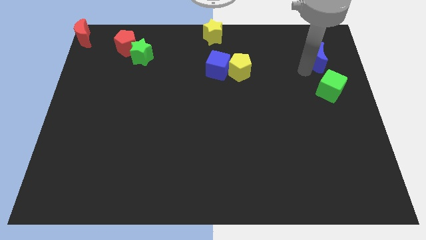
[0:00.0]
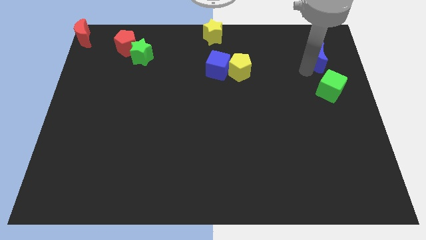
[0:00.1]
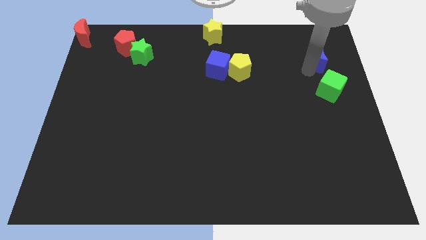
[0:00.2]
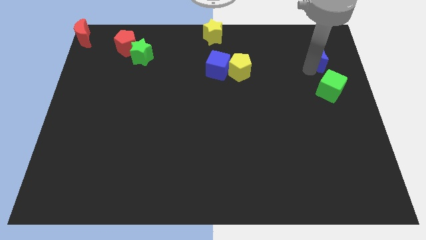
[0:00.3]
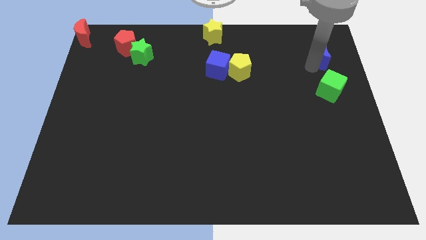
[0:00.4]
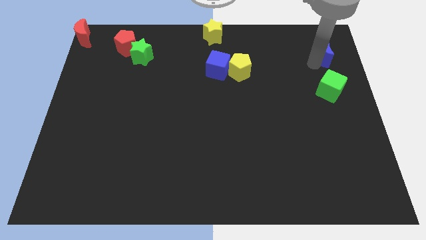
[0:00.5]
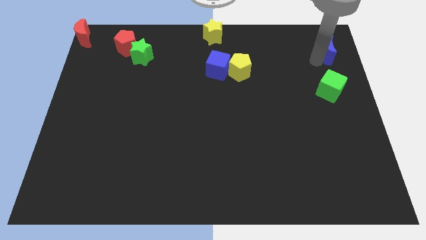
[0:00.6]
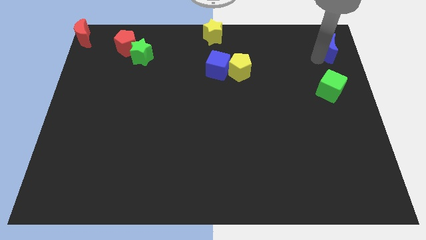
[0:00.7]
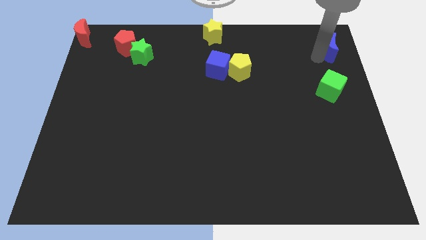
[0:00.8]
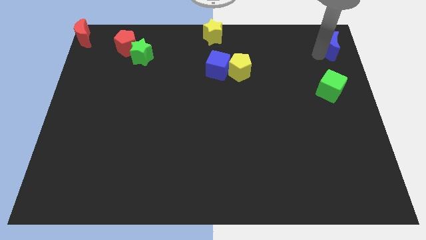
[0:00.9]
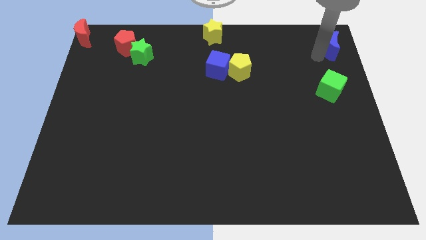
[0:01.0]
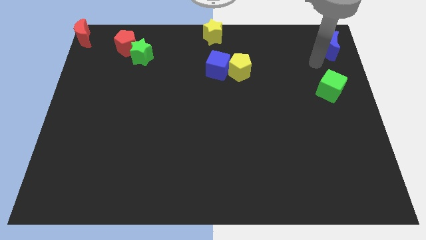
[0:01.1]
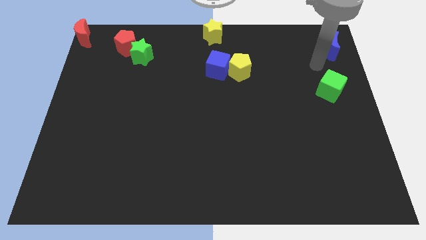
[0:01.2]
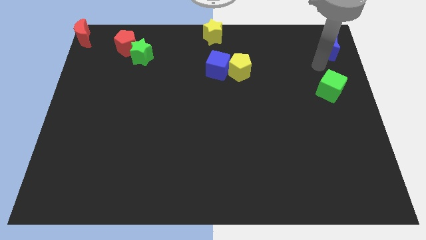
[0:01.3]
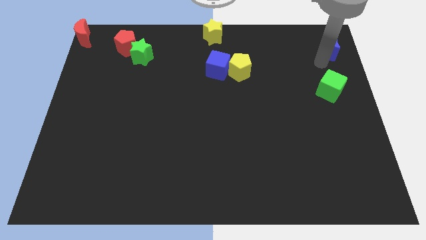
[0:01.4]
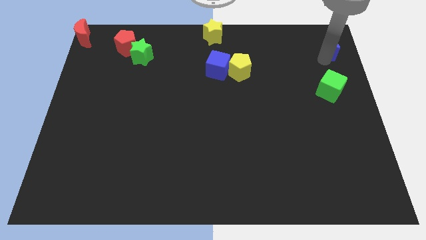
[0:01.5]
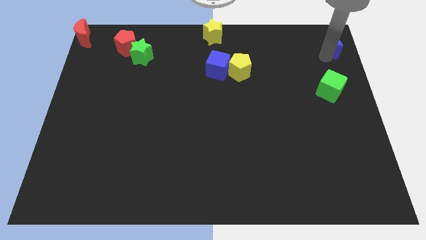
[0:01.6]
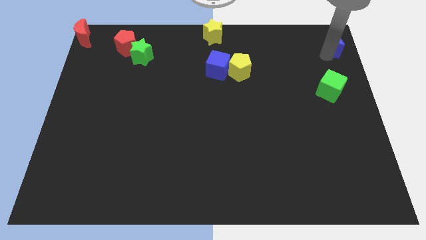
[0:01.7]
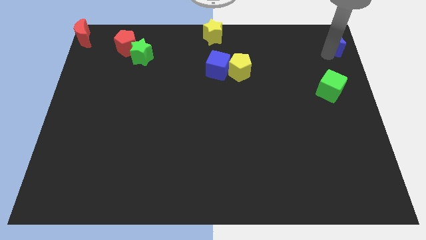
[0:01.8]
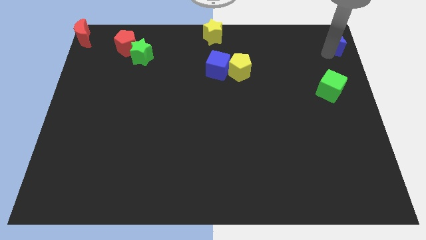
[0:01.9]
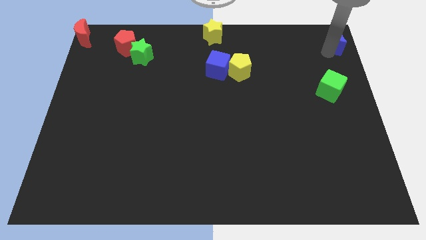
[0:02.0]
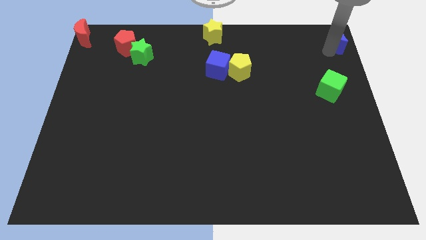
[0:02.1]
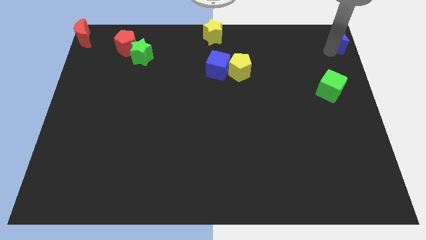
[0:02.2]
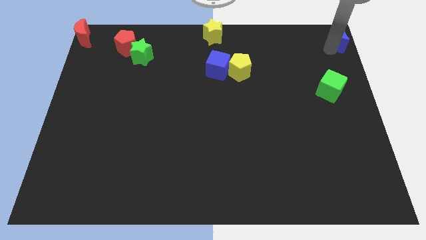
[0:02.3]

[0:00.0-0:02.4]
drag the blue moon to the top right of the board

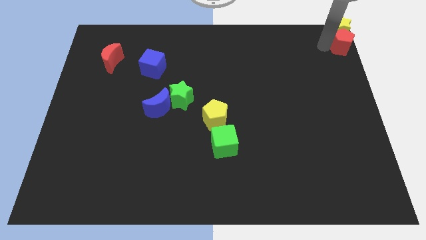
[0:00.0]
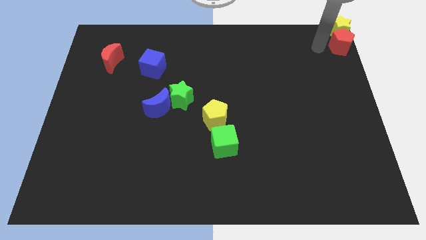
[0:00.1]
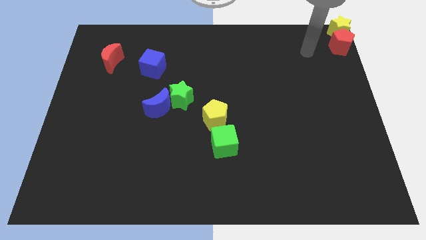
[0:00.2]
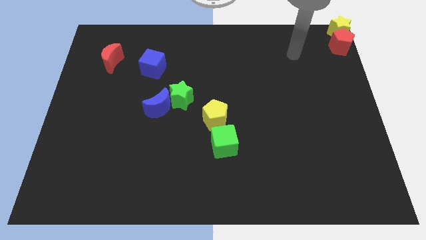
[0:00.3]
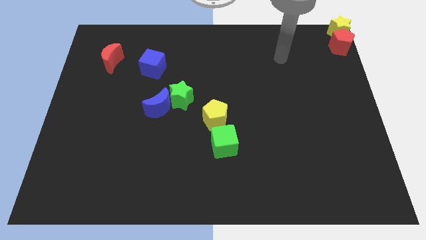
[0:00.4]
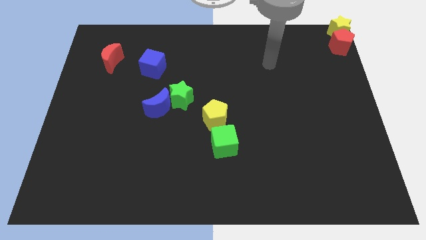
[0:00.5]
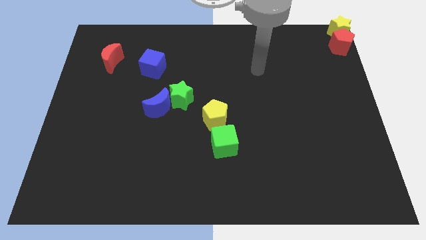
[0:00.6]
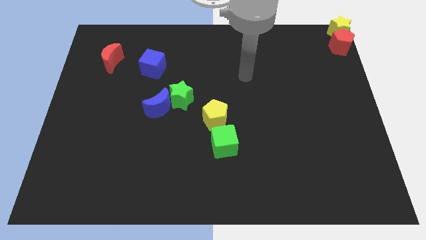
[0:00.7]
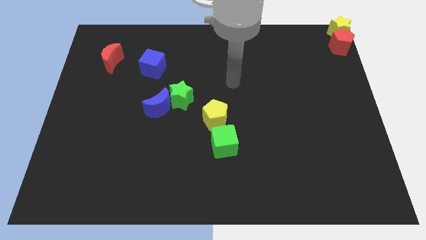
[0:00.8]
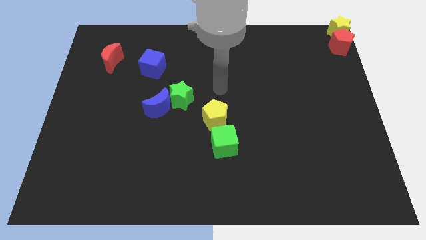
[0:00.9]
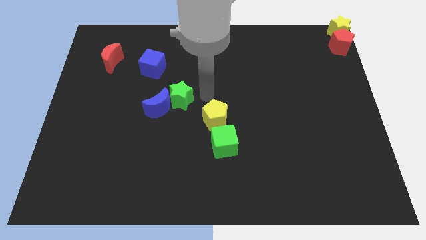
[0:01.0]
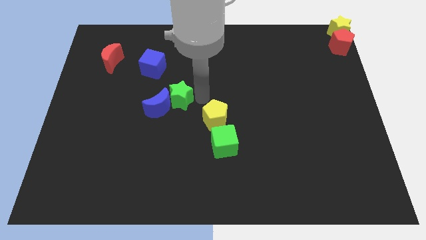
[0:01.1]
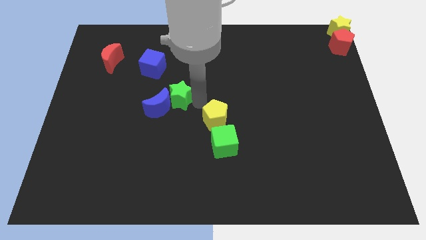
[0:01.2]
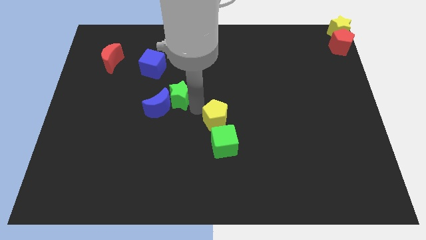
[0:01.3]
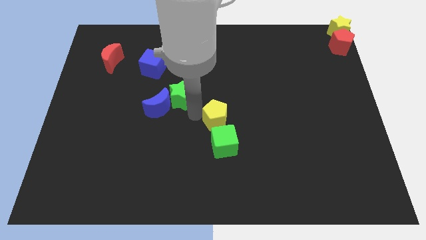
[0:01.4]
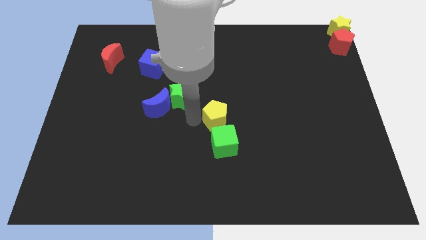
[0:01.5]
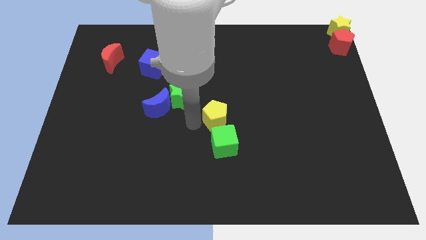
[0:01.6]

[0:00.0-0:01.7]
place your arm at the left of the yellow pentagon

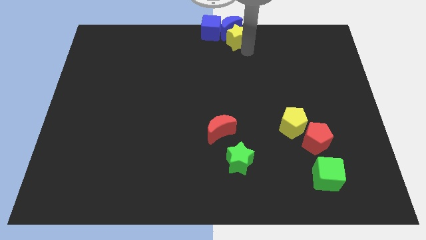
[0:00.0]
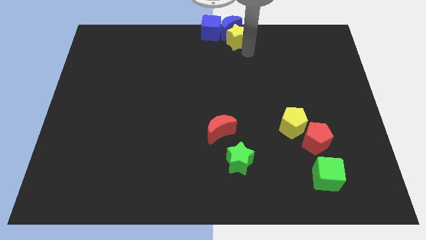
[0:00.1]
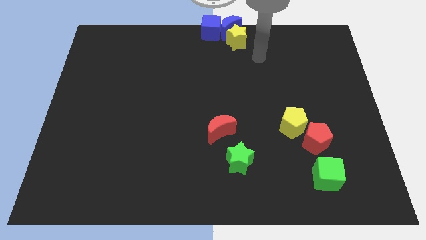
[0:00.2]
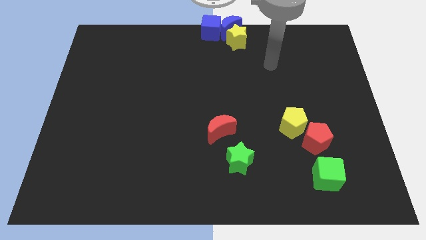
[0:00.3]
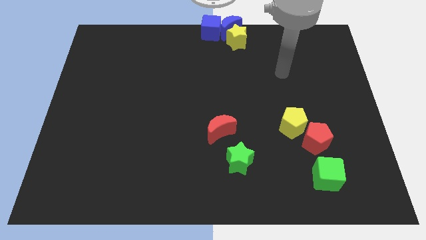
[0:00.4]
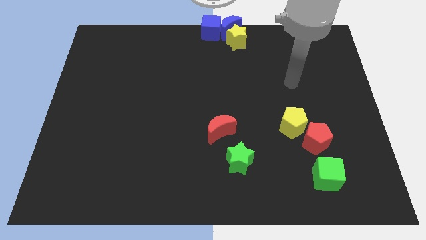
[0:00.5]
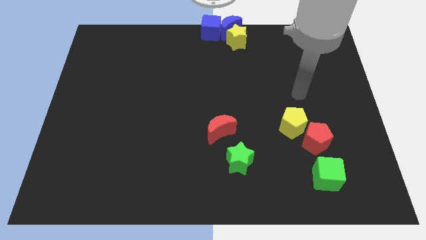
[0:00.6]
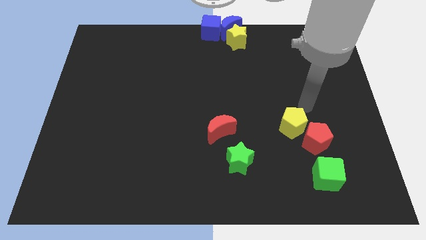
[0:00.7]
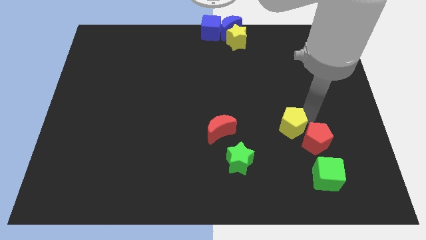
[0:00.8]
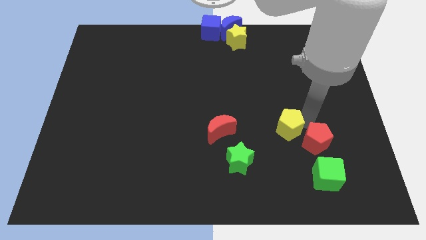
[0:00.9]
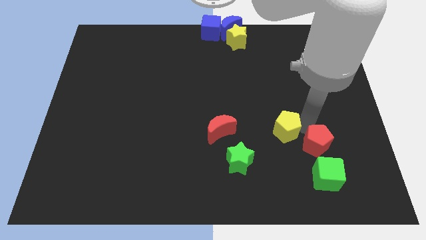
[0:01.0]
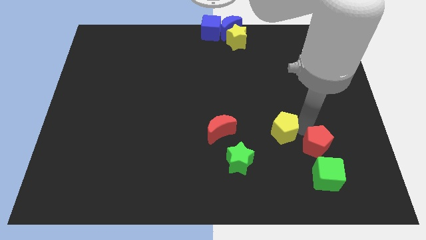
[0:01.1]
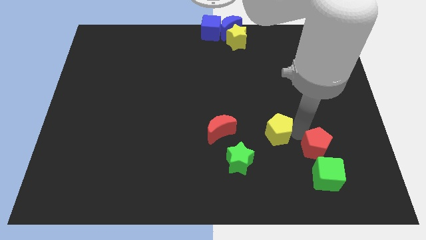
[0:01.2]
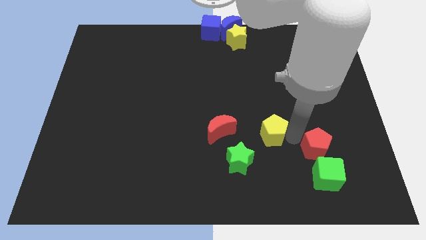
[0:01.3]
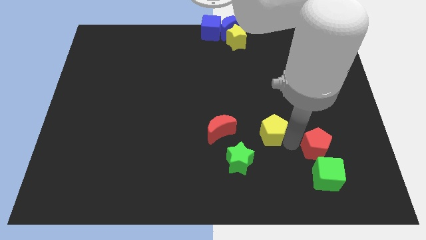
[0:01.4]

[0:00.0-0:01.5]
place your arm in between the yellow pentagona and red pentagon

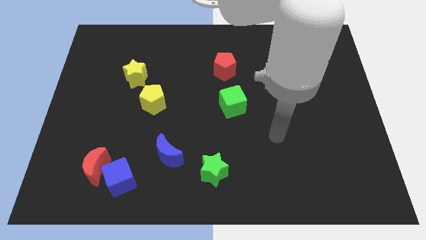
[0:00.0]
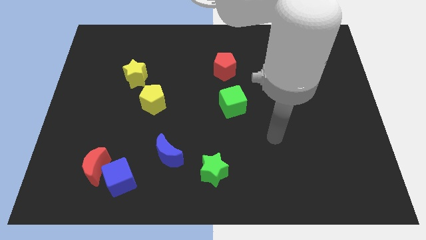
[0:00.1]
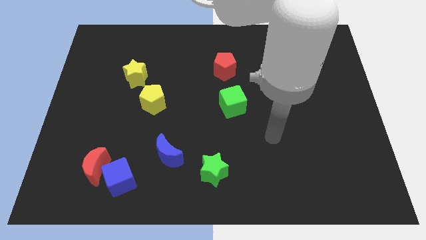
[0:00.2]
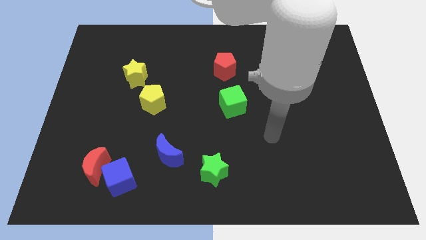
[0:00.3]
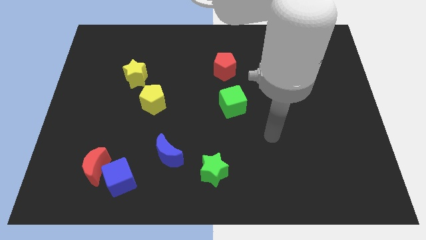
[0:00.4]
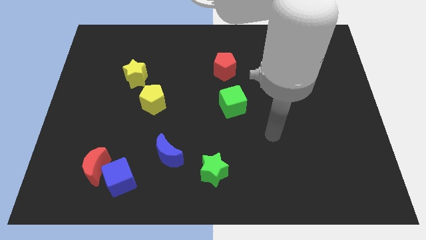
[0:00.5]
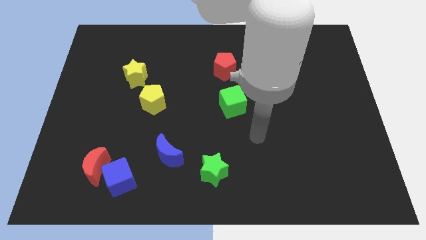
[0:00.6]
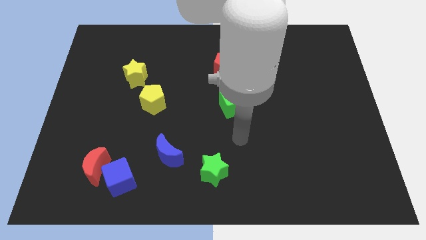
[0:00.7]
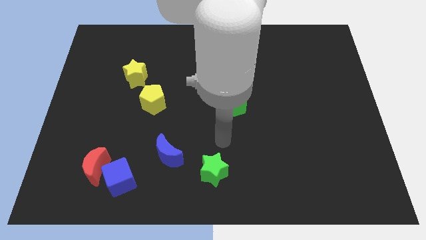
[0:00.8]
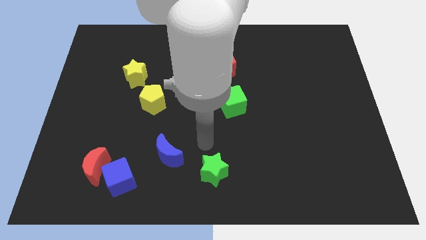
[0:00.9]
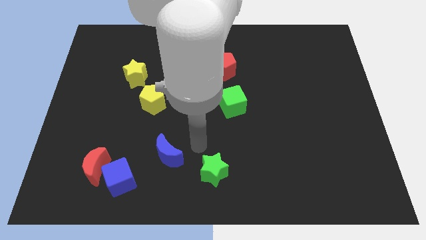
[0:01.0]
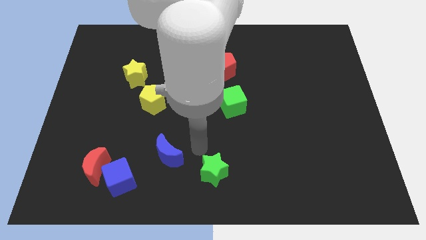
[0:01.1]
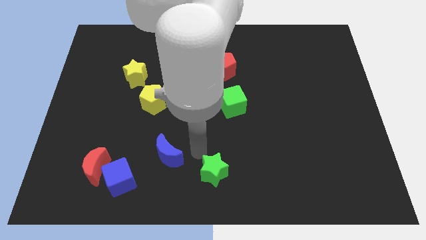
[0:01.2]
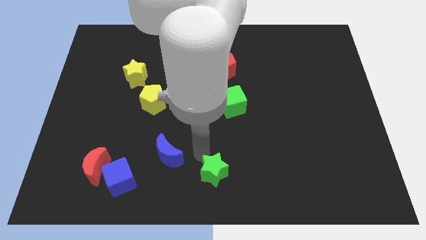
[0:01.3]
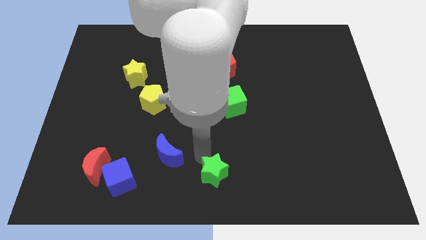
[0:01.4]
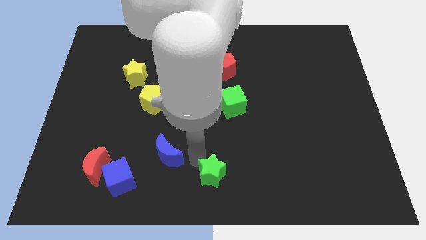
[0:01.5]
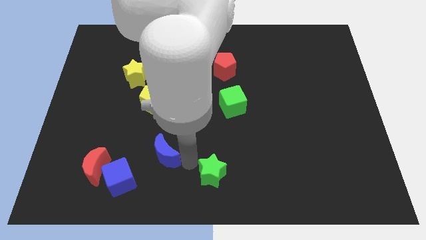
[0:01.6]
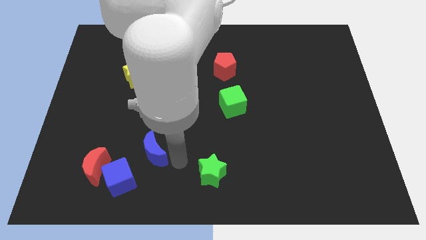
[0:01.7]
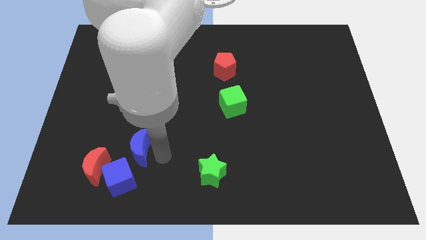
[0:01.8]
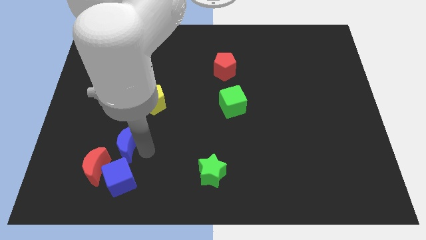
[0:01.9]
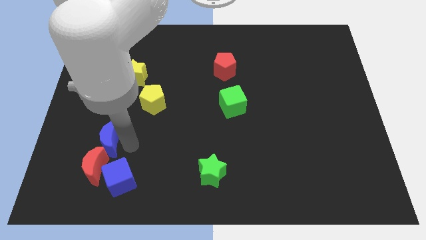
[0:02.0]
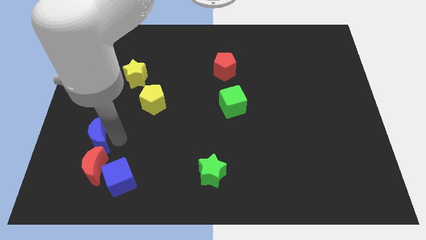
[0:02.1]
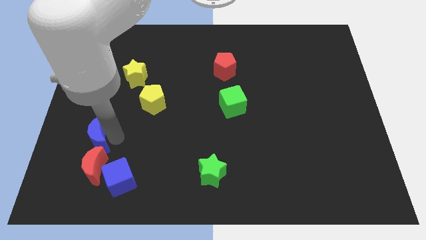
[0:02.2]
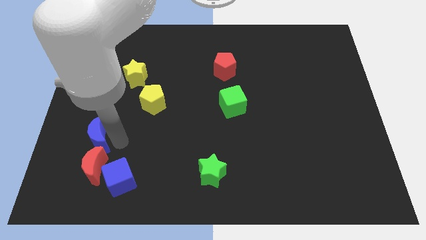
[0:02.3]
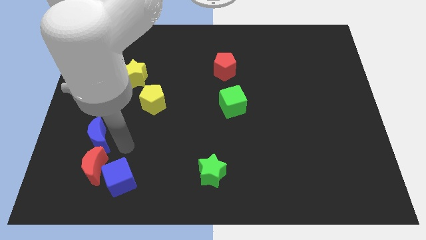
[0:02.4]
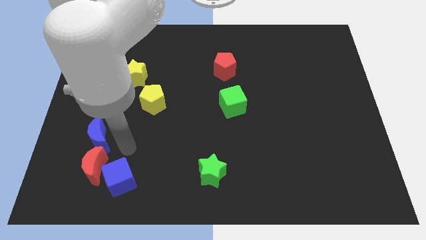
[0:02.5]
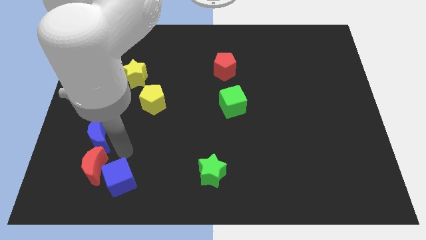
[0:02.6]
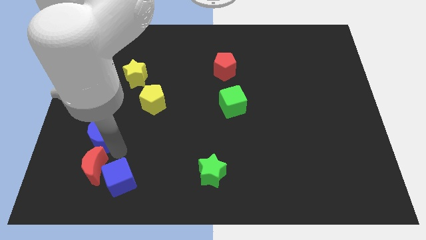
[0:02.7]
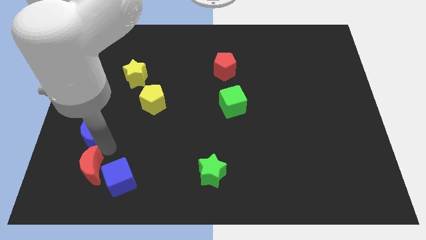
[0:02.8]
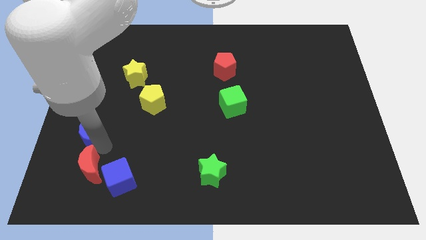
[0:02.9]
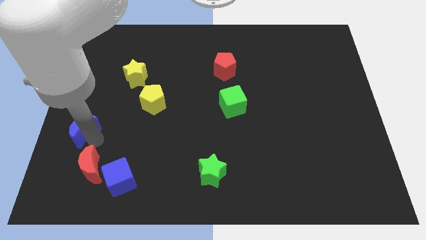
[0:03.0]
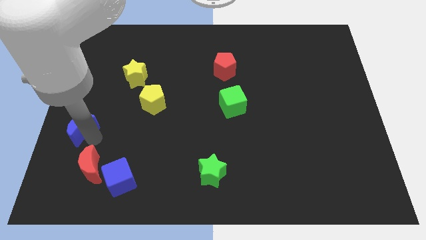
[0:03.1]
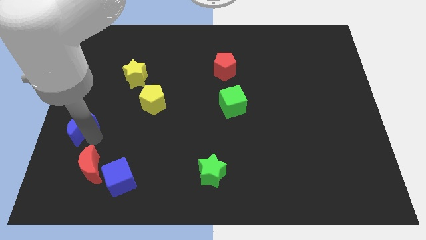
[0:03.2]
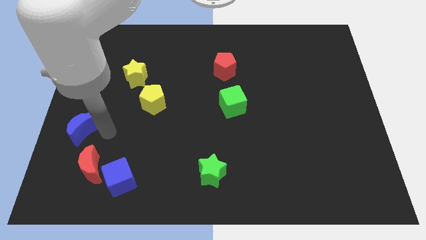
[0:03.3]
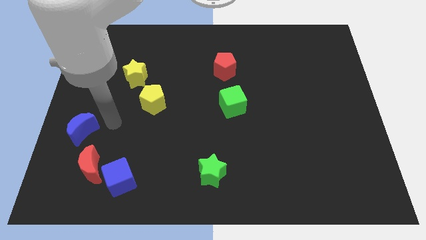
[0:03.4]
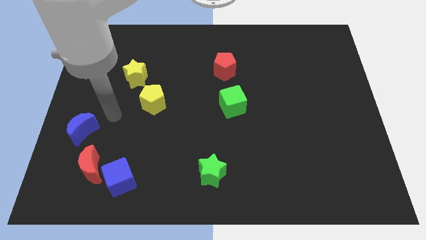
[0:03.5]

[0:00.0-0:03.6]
move the blue cube to the right of the board
